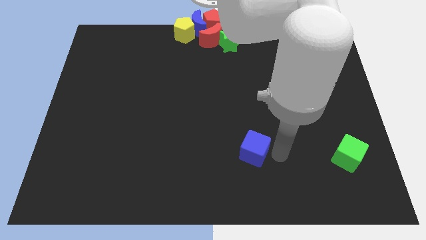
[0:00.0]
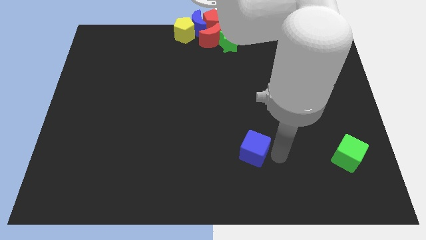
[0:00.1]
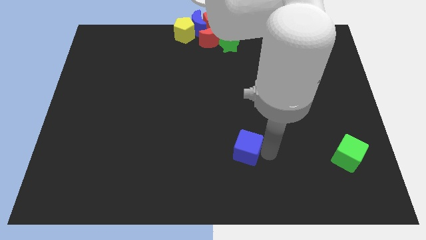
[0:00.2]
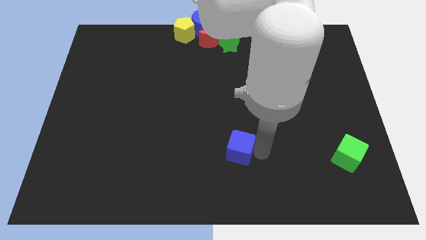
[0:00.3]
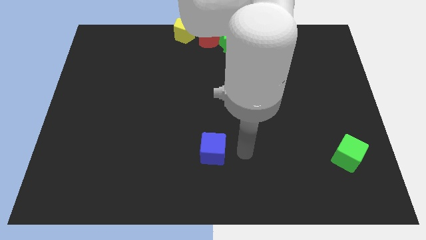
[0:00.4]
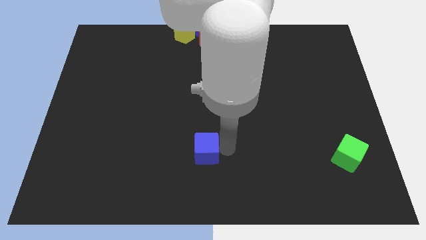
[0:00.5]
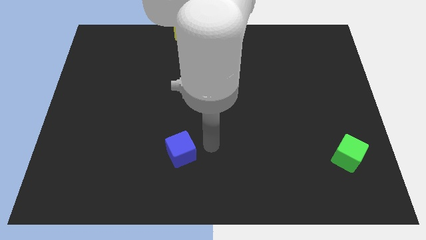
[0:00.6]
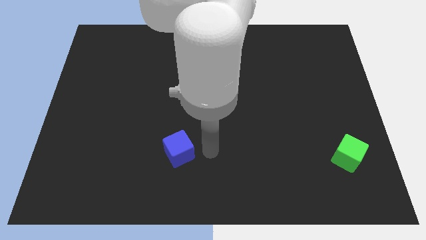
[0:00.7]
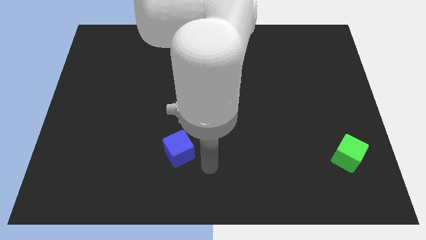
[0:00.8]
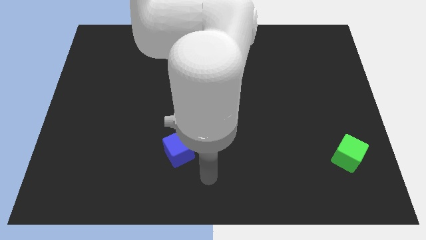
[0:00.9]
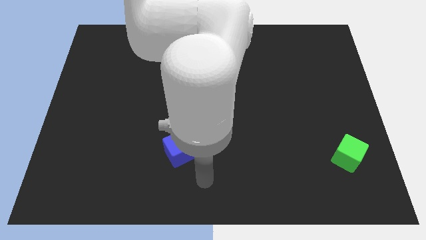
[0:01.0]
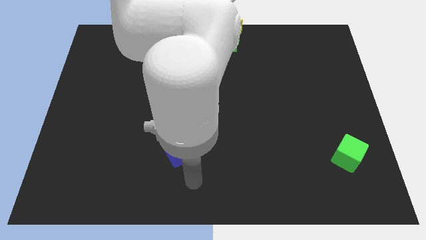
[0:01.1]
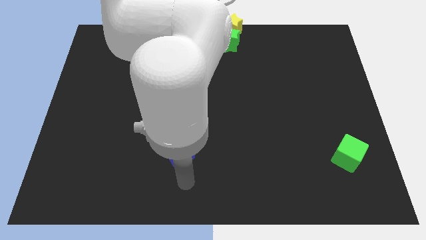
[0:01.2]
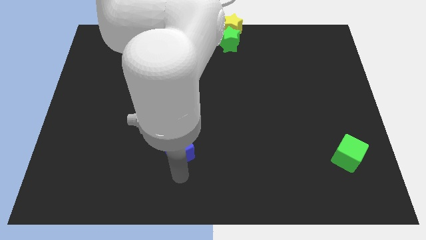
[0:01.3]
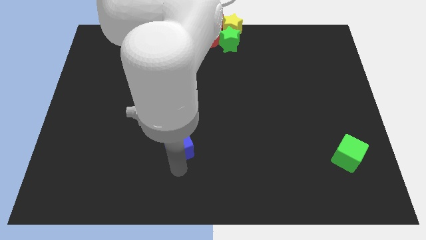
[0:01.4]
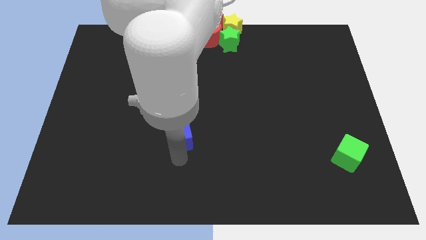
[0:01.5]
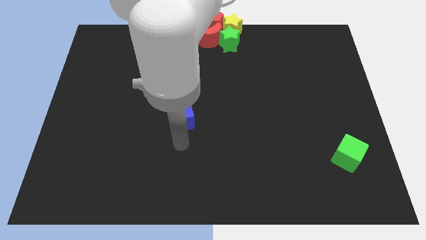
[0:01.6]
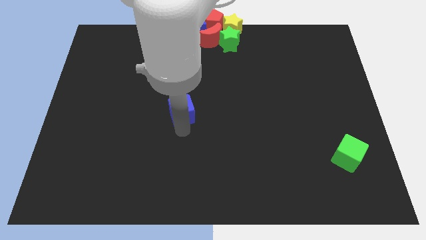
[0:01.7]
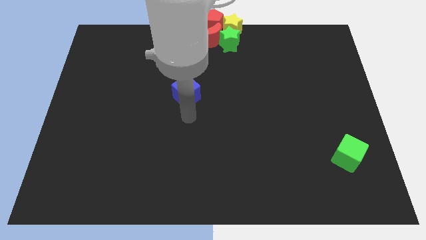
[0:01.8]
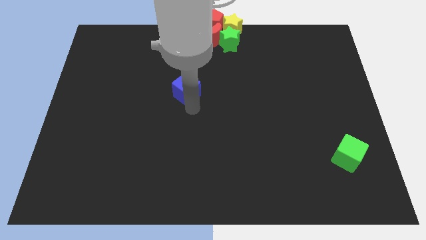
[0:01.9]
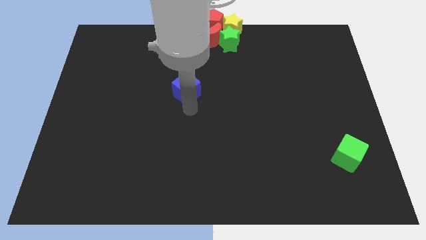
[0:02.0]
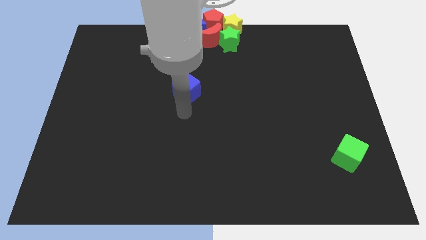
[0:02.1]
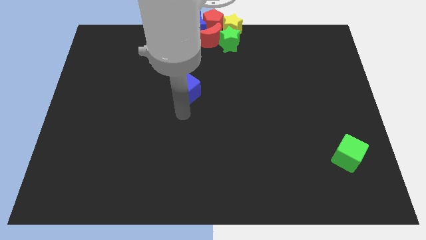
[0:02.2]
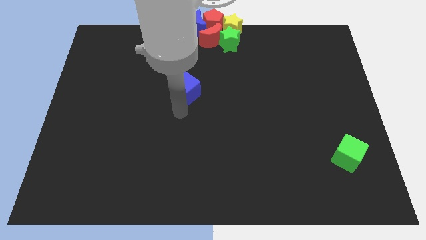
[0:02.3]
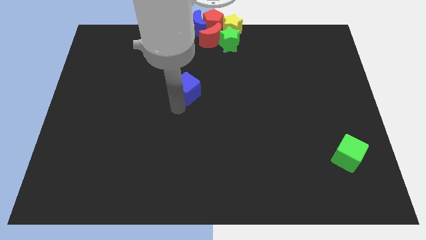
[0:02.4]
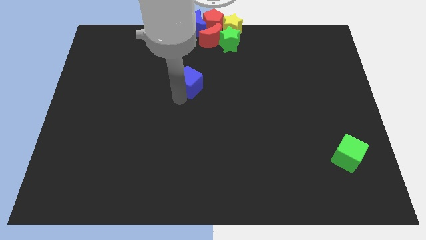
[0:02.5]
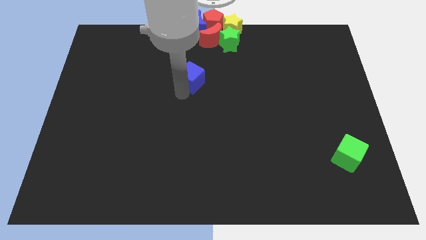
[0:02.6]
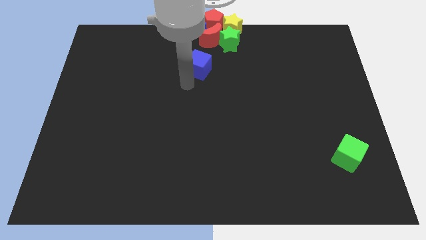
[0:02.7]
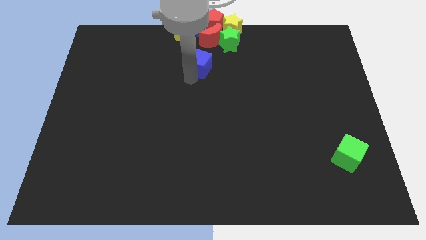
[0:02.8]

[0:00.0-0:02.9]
move the blue cube below the red moon

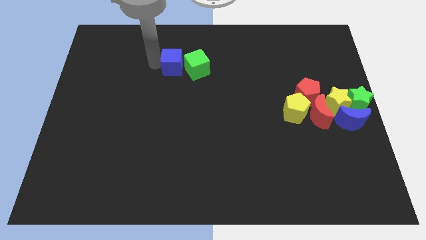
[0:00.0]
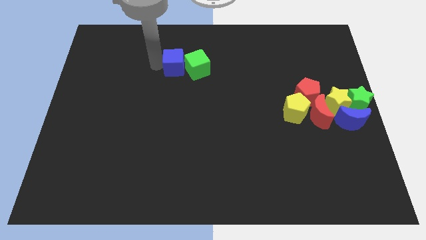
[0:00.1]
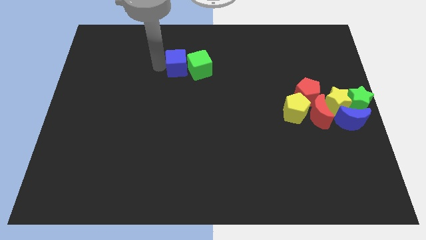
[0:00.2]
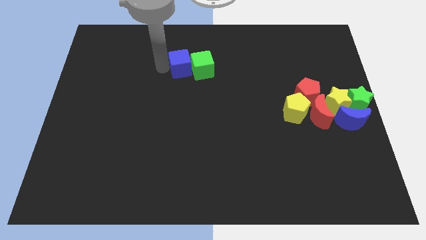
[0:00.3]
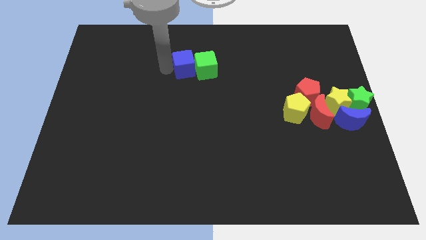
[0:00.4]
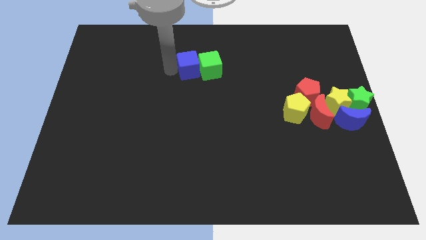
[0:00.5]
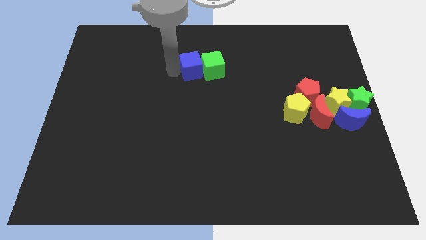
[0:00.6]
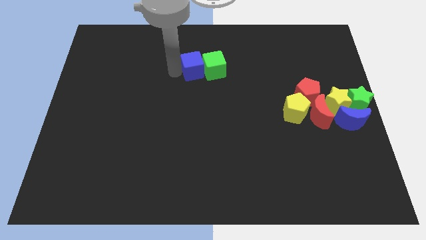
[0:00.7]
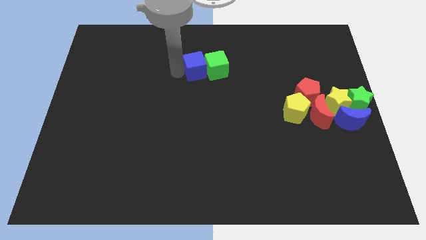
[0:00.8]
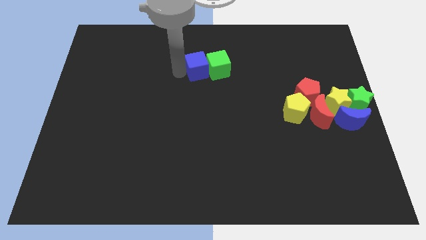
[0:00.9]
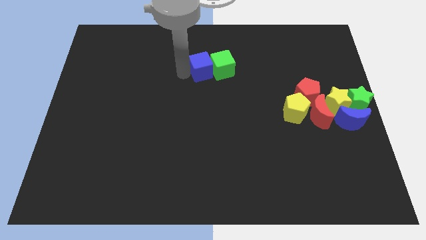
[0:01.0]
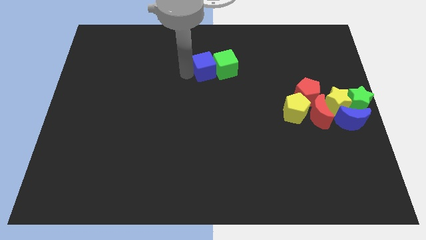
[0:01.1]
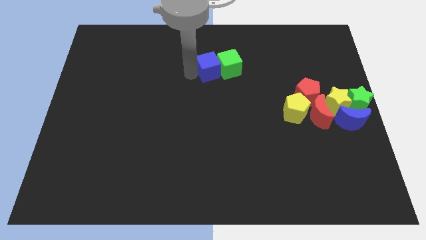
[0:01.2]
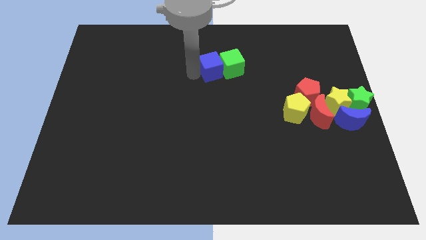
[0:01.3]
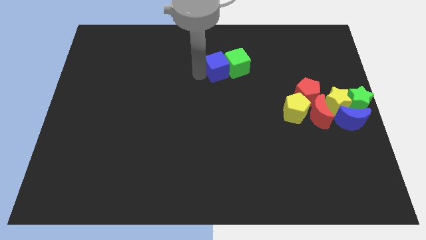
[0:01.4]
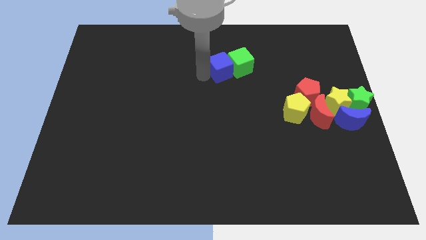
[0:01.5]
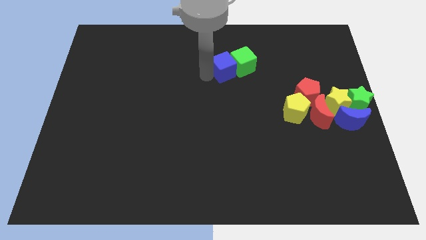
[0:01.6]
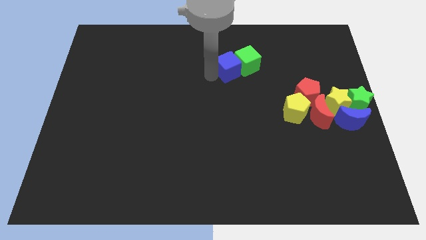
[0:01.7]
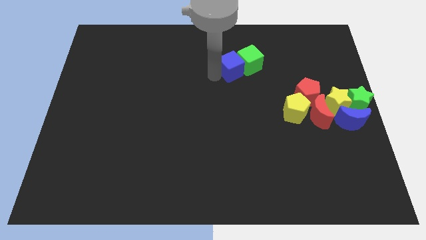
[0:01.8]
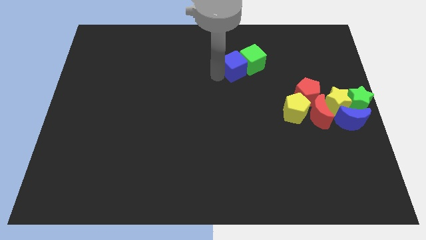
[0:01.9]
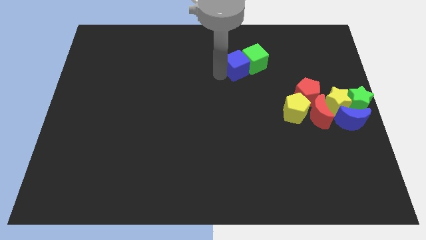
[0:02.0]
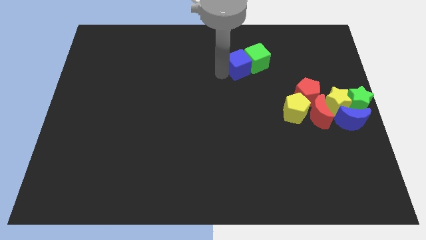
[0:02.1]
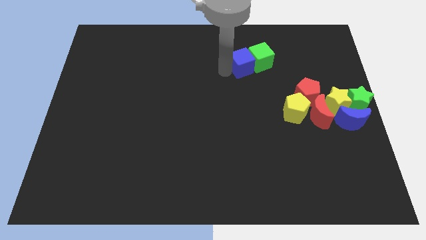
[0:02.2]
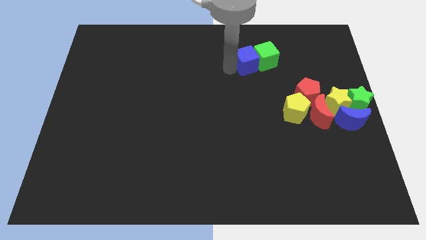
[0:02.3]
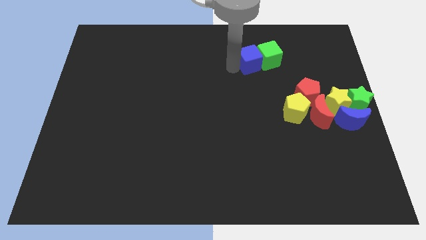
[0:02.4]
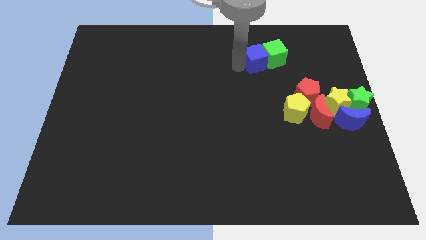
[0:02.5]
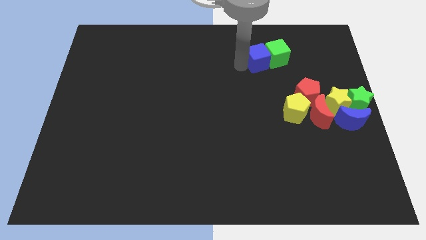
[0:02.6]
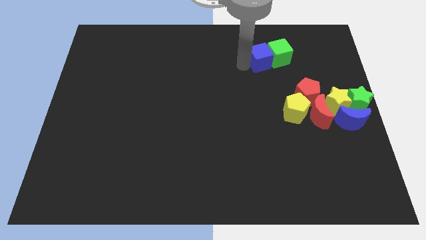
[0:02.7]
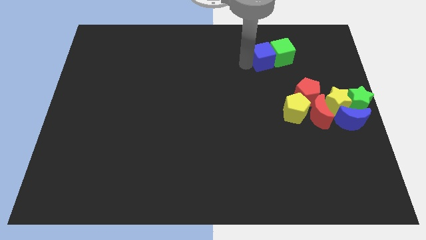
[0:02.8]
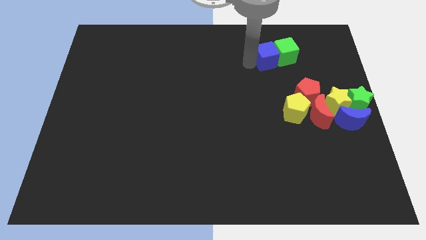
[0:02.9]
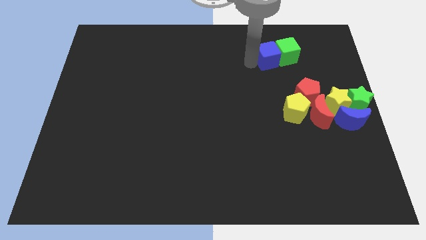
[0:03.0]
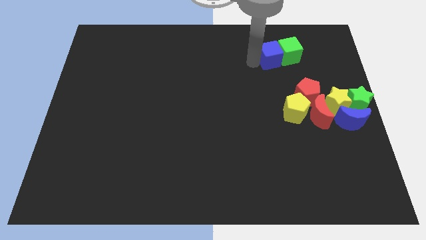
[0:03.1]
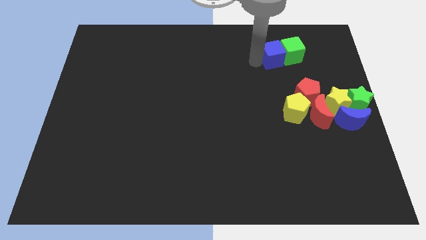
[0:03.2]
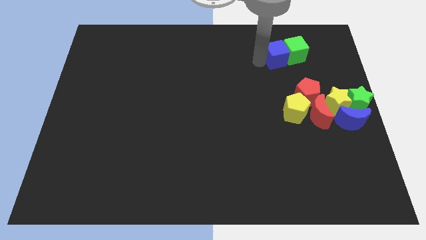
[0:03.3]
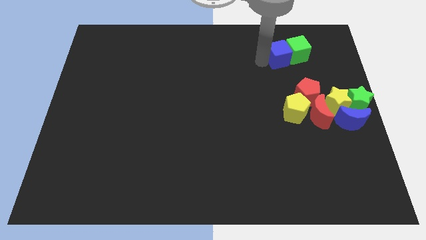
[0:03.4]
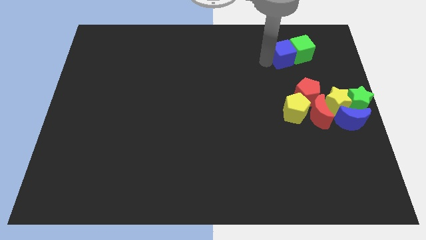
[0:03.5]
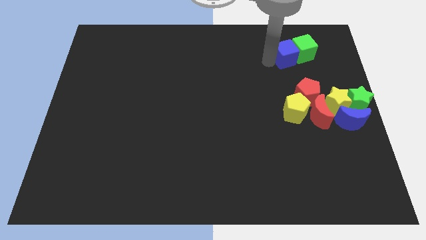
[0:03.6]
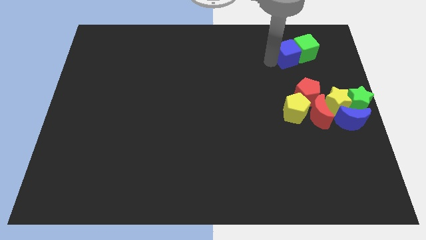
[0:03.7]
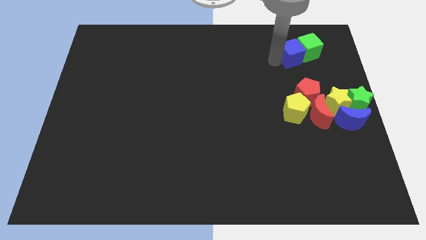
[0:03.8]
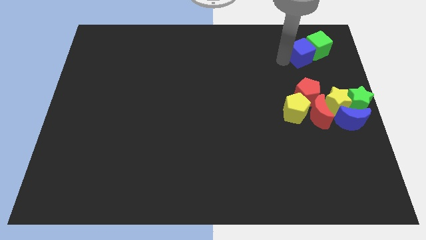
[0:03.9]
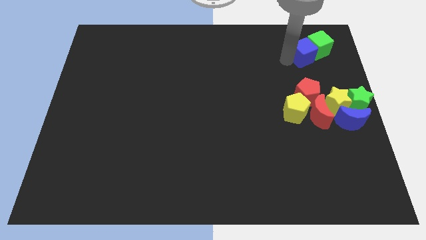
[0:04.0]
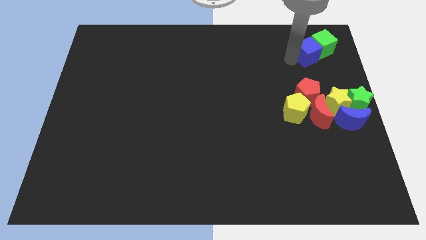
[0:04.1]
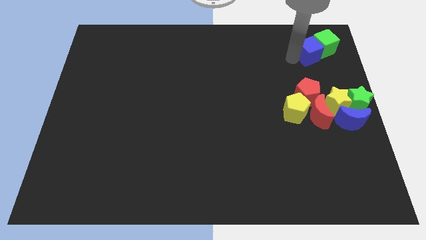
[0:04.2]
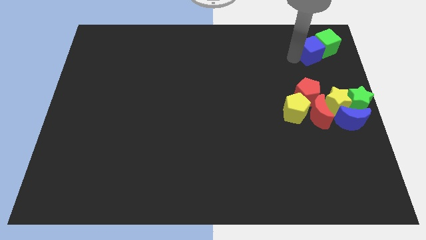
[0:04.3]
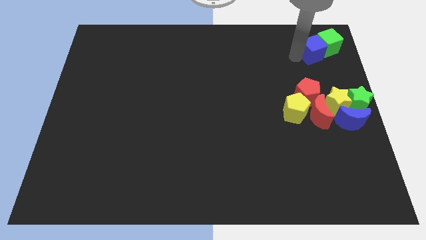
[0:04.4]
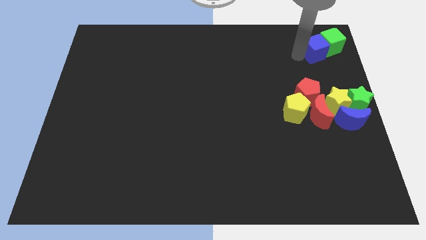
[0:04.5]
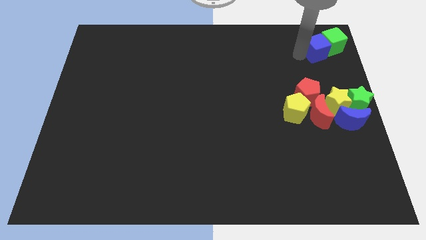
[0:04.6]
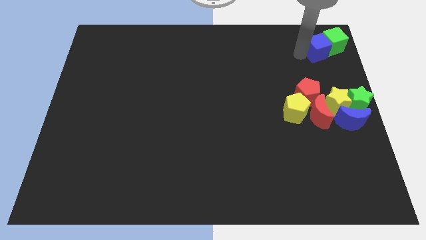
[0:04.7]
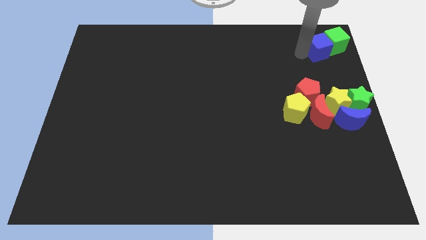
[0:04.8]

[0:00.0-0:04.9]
move the blue cube into the green cube to the top right corner of the board

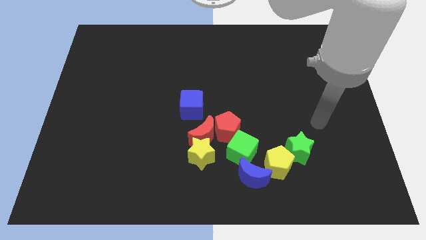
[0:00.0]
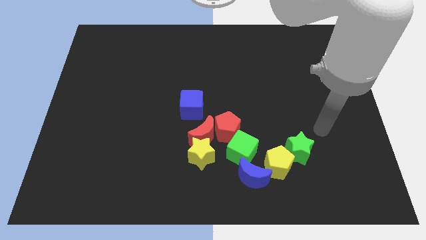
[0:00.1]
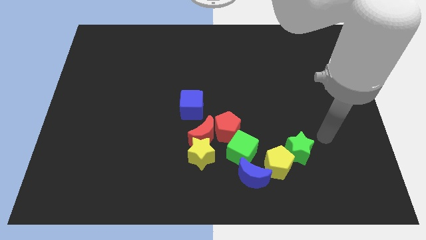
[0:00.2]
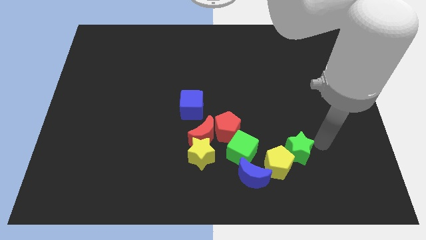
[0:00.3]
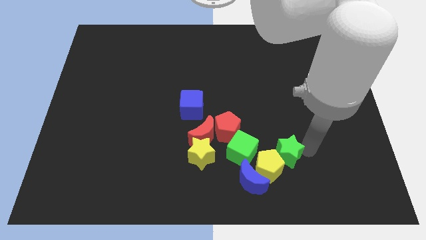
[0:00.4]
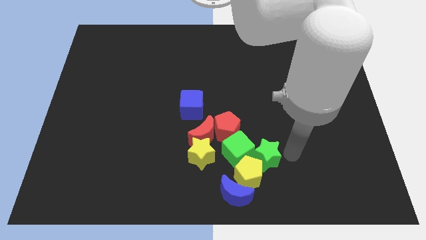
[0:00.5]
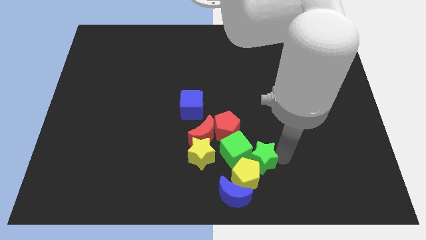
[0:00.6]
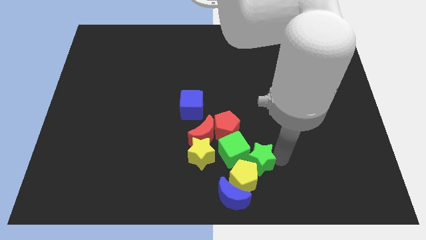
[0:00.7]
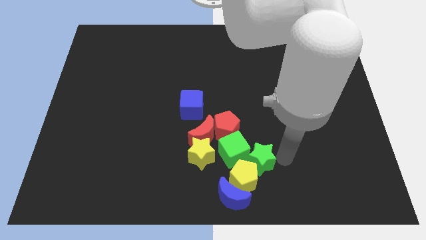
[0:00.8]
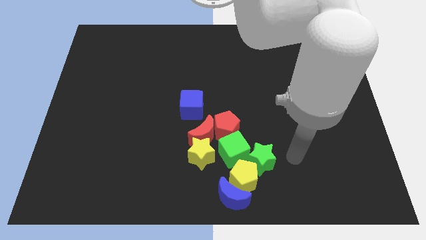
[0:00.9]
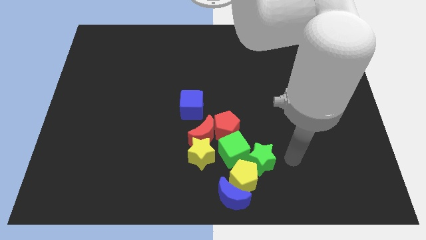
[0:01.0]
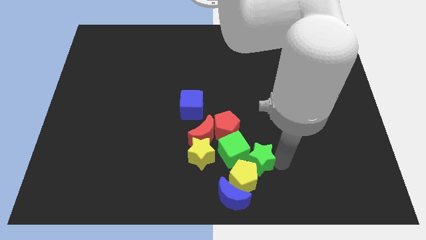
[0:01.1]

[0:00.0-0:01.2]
push the green star into the yellow pentagon

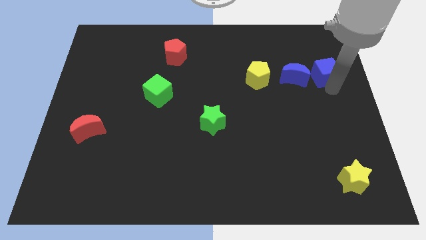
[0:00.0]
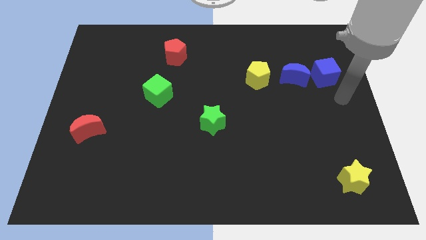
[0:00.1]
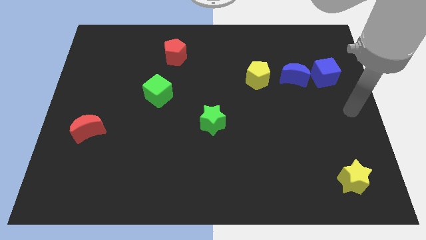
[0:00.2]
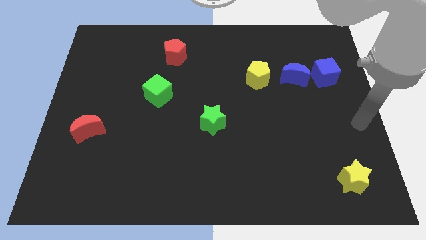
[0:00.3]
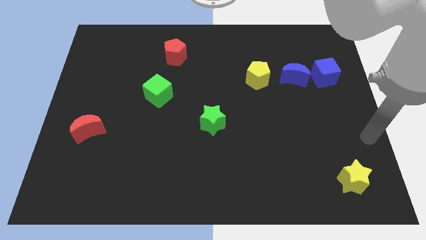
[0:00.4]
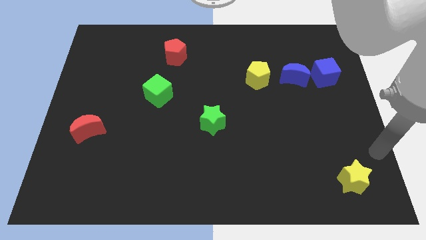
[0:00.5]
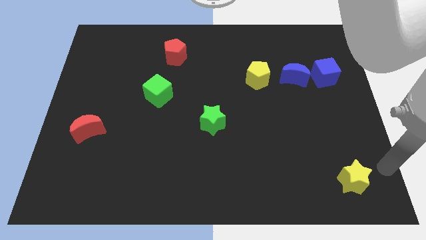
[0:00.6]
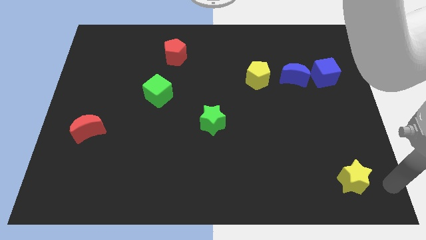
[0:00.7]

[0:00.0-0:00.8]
point your arm at the right of the yellow star
